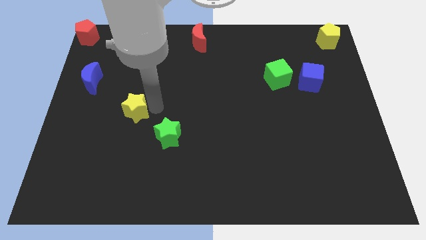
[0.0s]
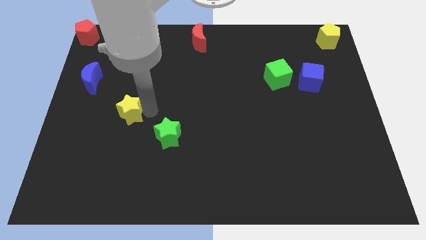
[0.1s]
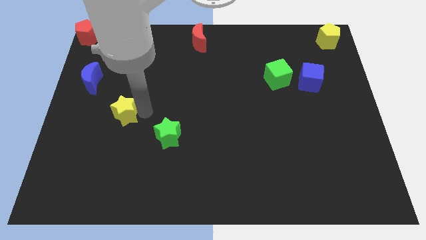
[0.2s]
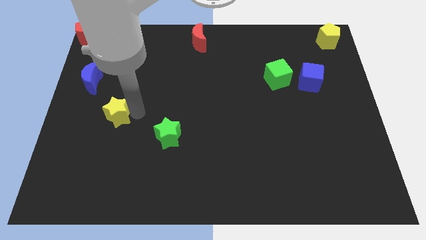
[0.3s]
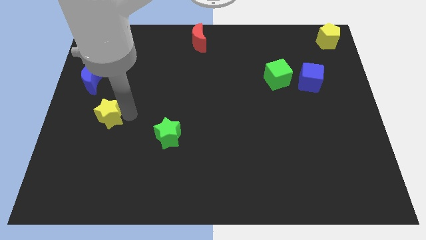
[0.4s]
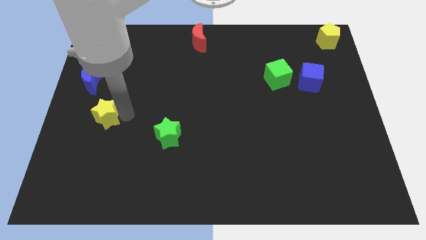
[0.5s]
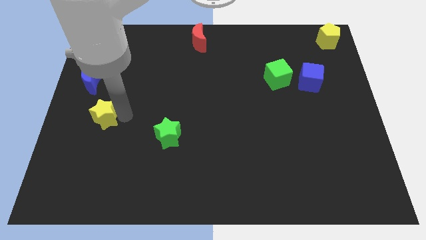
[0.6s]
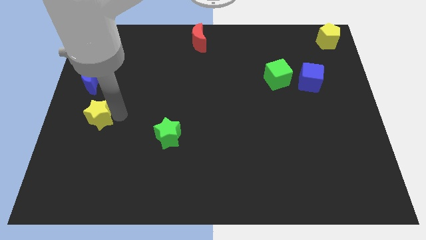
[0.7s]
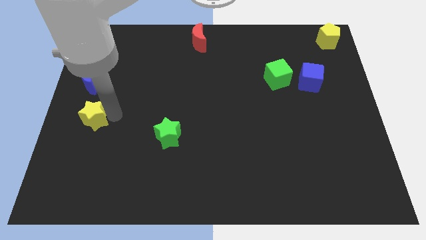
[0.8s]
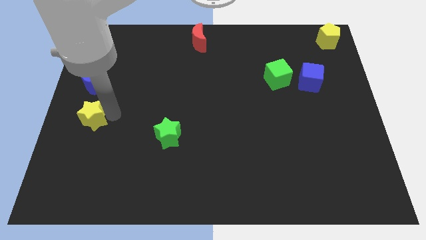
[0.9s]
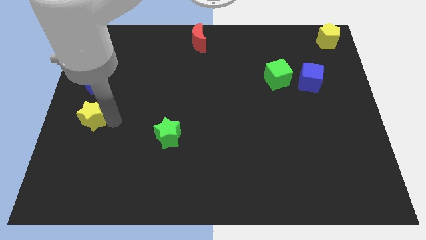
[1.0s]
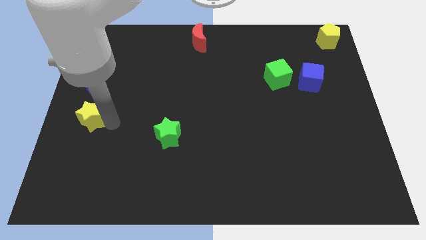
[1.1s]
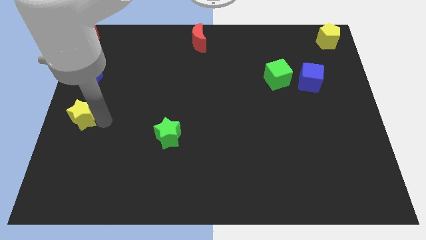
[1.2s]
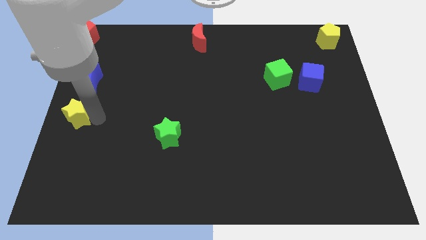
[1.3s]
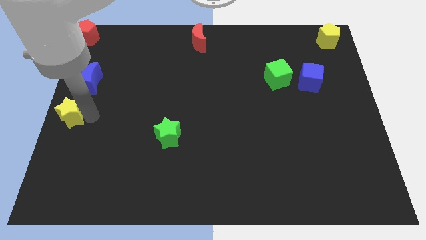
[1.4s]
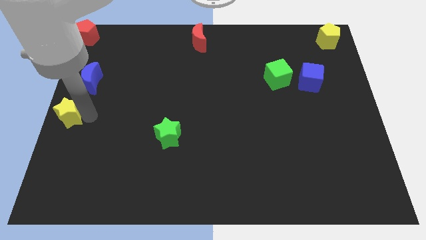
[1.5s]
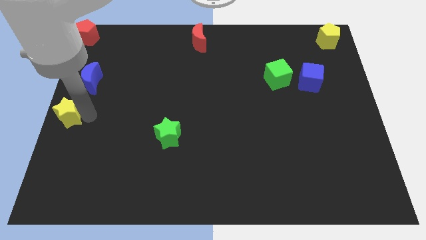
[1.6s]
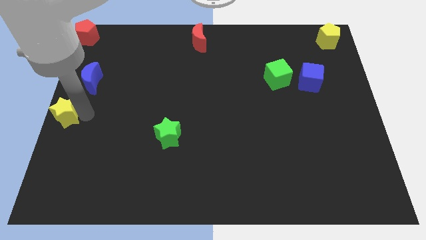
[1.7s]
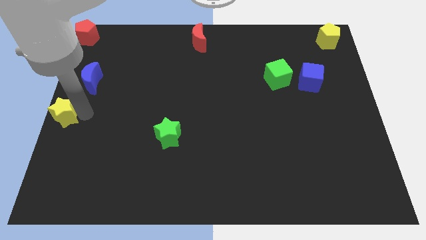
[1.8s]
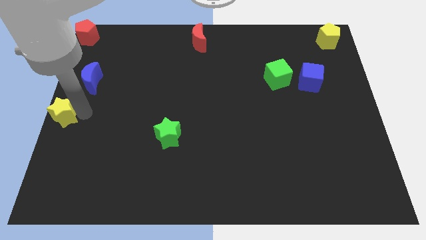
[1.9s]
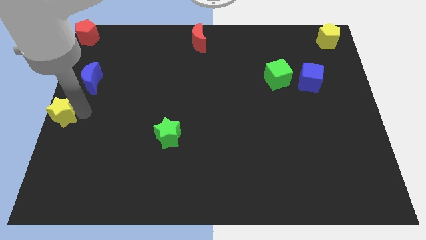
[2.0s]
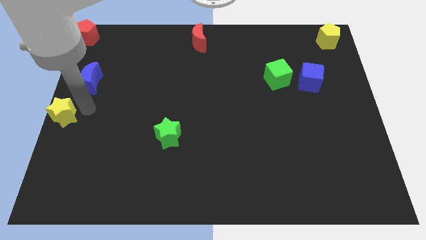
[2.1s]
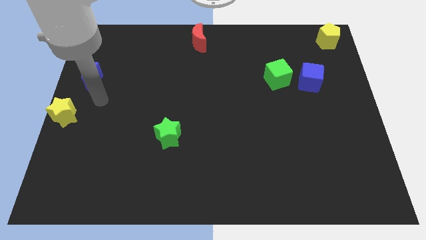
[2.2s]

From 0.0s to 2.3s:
push the yellow star to the center left of the board

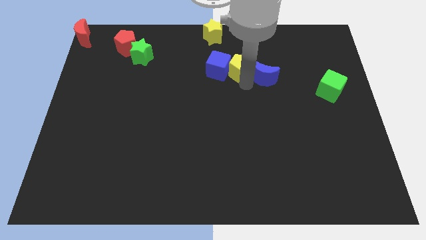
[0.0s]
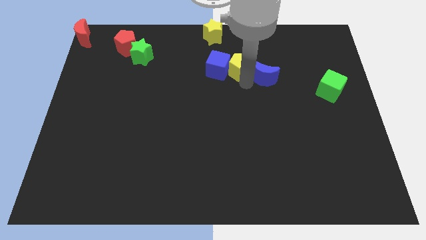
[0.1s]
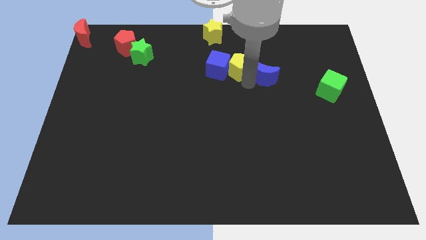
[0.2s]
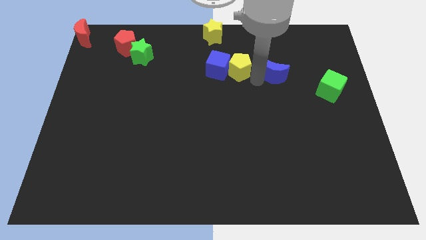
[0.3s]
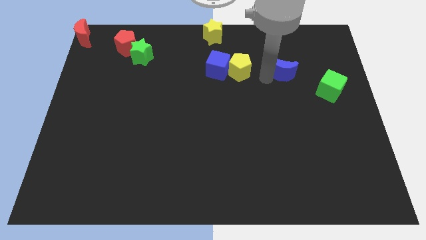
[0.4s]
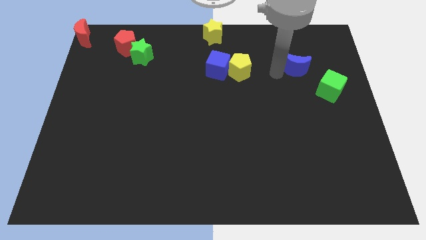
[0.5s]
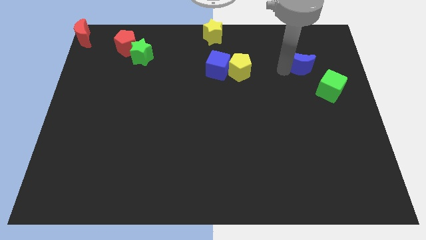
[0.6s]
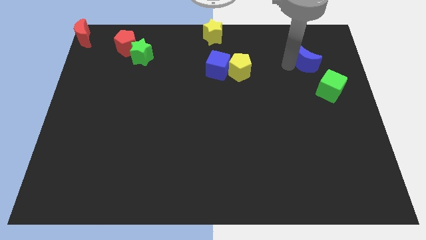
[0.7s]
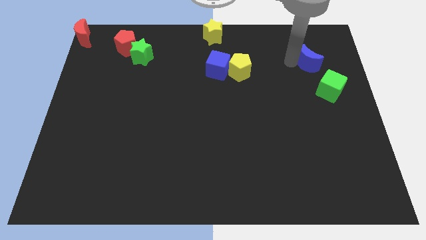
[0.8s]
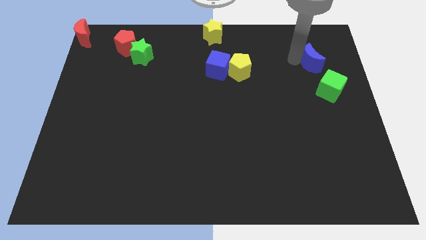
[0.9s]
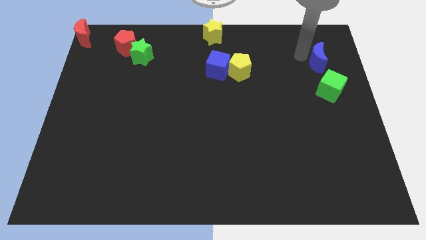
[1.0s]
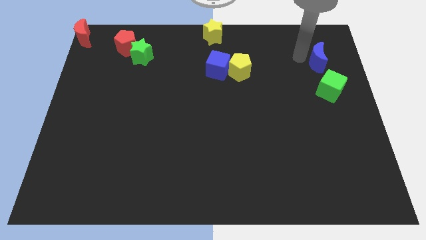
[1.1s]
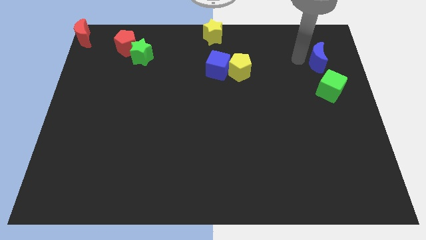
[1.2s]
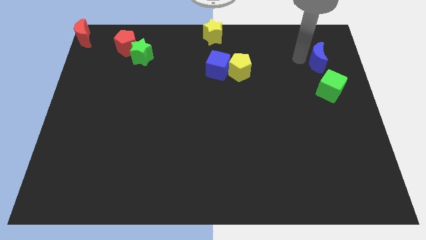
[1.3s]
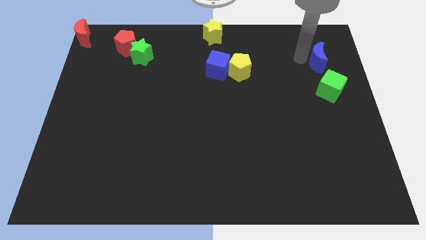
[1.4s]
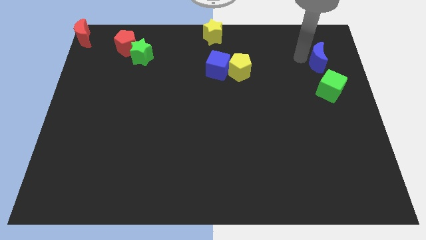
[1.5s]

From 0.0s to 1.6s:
push the blue moon away from the yellow pentagon

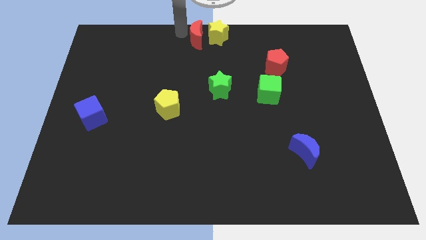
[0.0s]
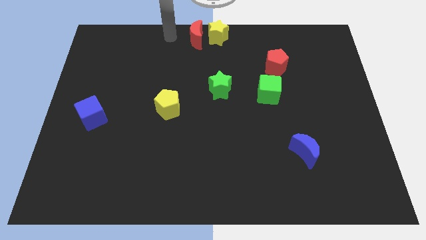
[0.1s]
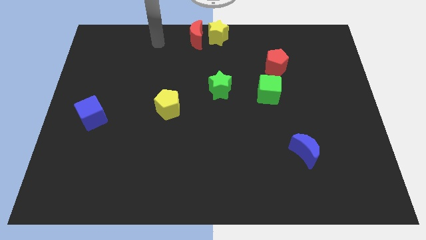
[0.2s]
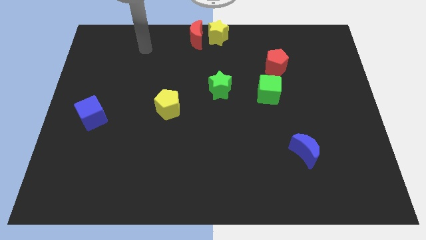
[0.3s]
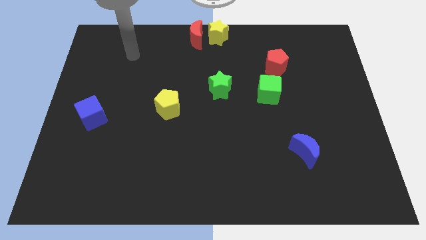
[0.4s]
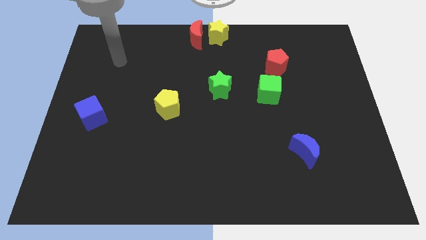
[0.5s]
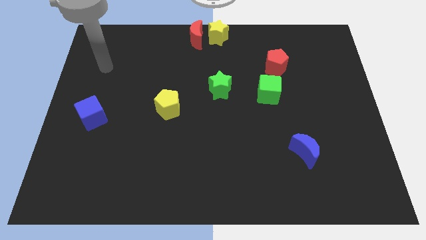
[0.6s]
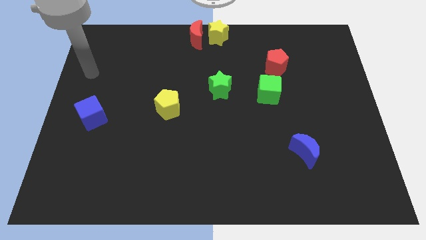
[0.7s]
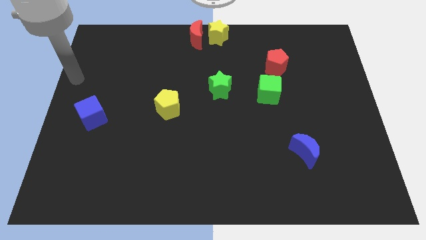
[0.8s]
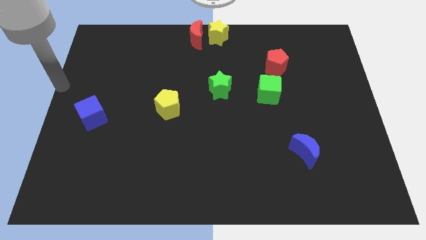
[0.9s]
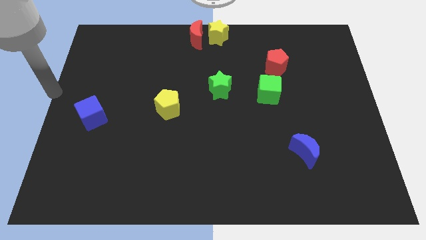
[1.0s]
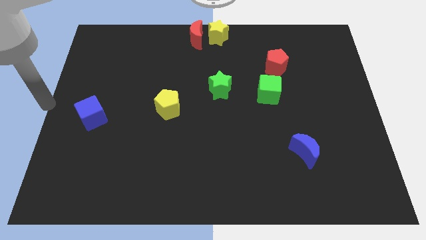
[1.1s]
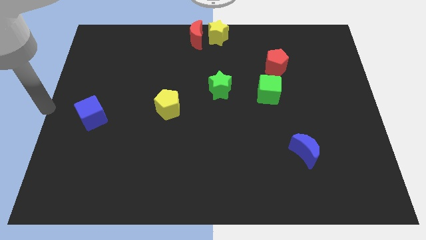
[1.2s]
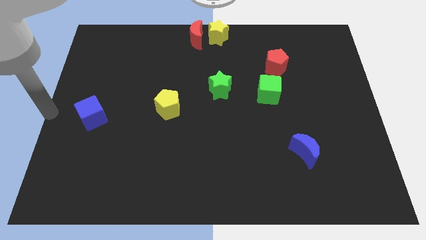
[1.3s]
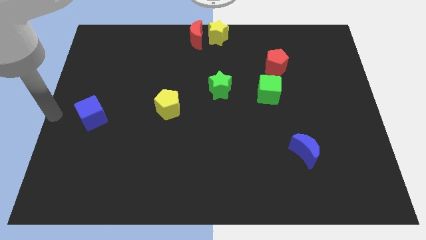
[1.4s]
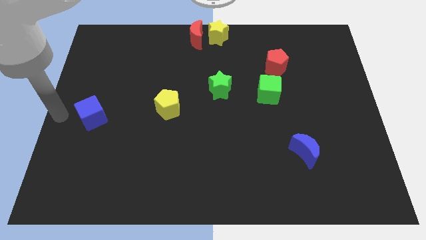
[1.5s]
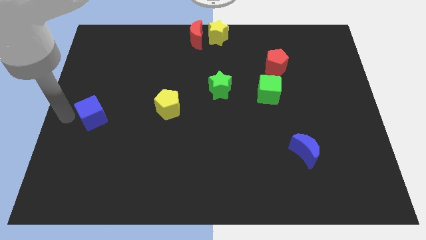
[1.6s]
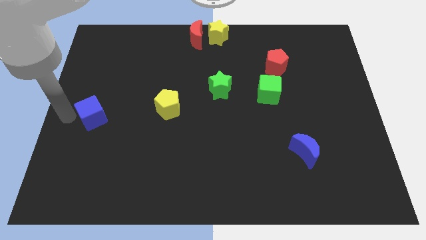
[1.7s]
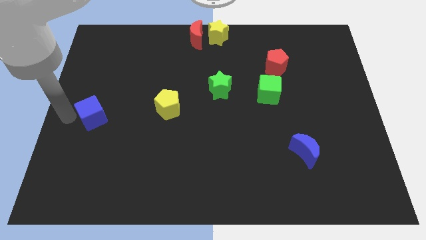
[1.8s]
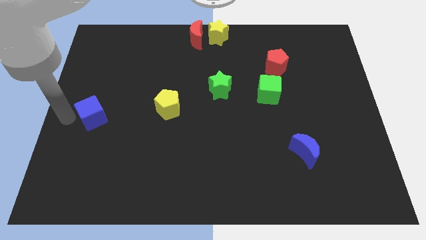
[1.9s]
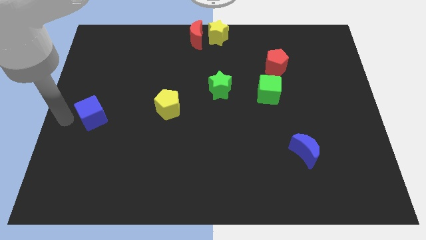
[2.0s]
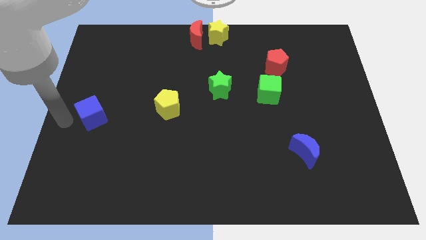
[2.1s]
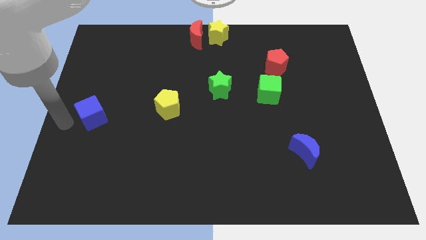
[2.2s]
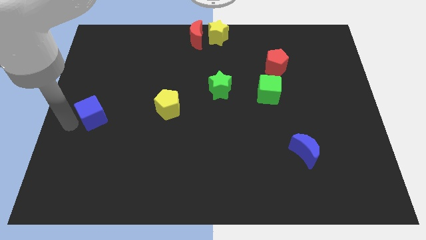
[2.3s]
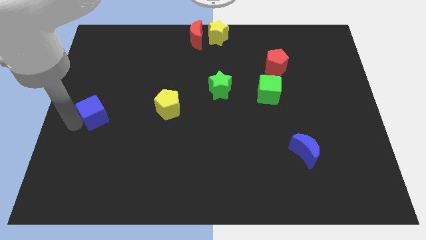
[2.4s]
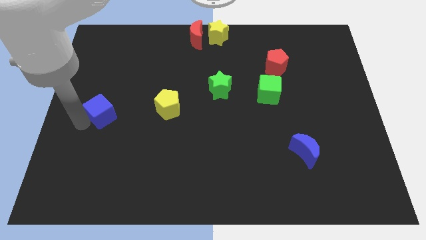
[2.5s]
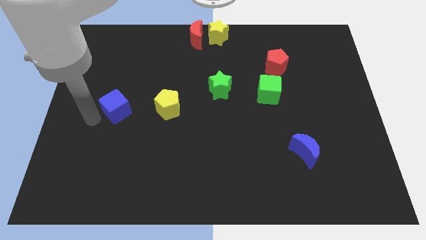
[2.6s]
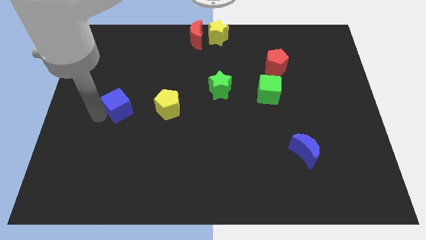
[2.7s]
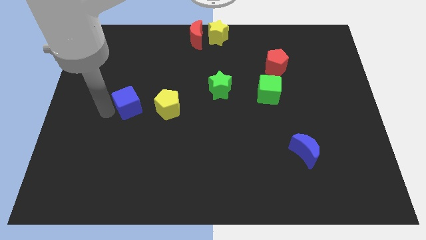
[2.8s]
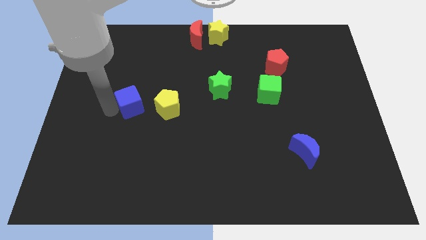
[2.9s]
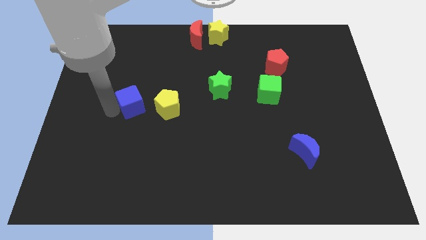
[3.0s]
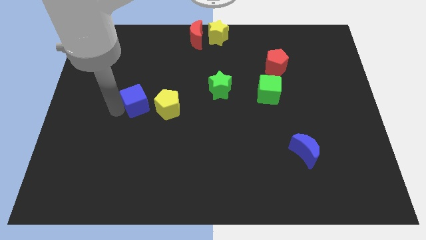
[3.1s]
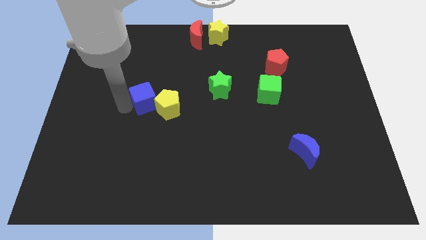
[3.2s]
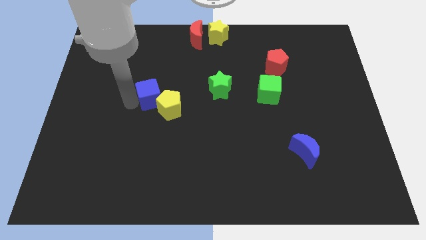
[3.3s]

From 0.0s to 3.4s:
push blue cube into yellow pentgaon

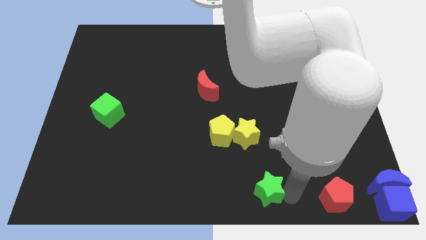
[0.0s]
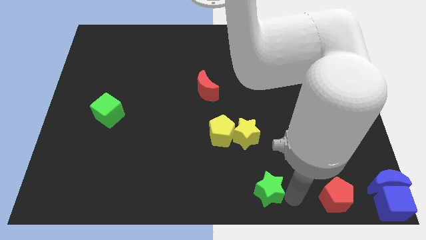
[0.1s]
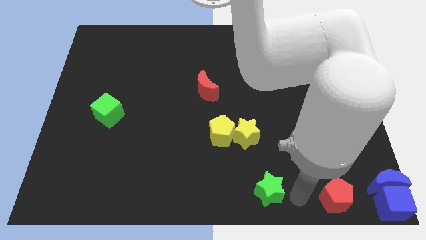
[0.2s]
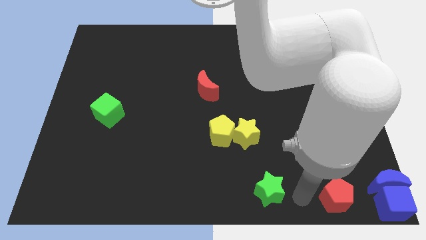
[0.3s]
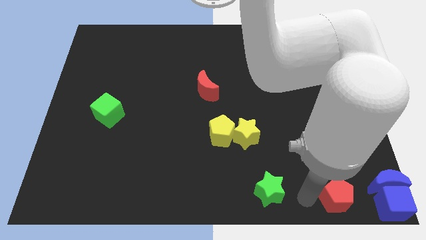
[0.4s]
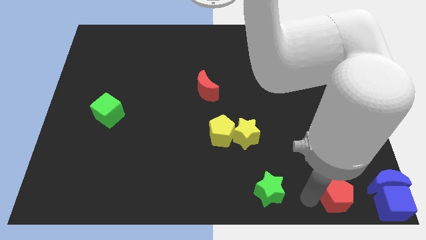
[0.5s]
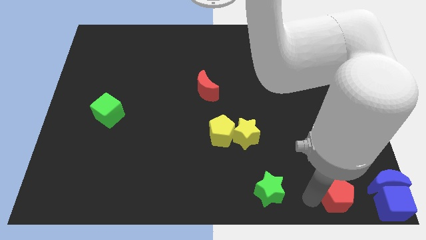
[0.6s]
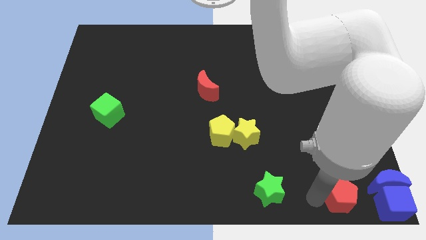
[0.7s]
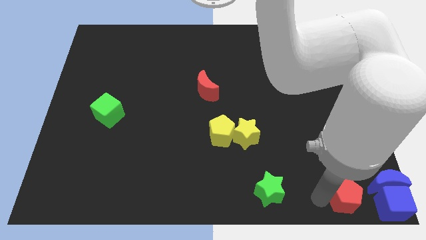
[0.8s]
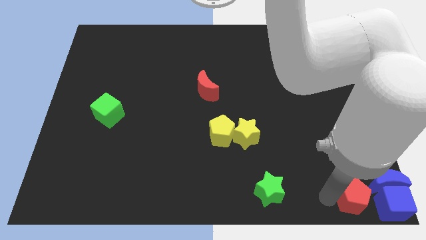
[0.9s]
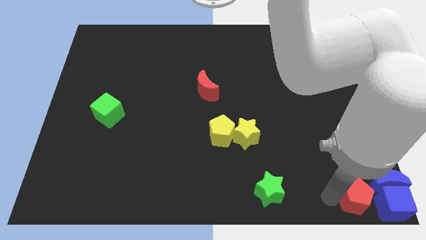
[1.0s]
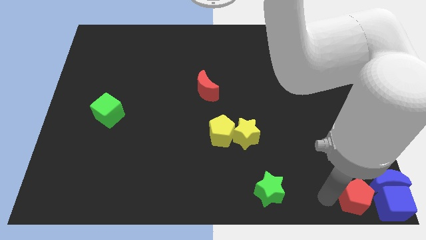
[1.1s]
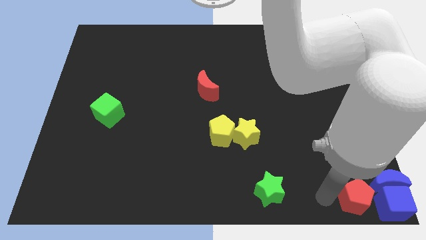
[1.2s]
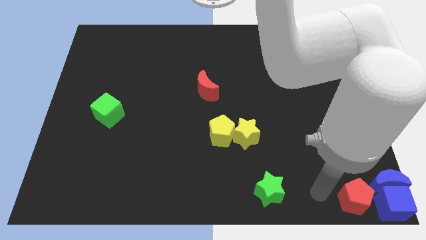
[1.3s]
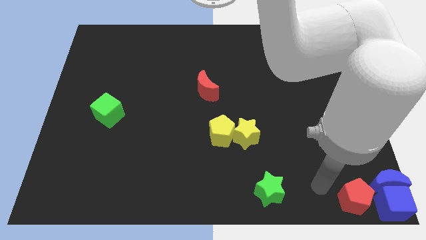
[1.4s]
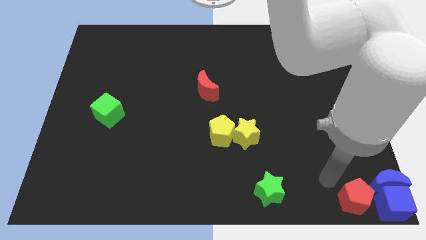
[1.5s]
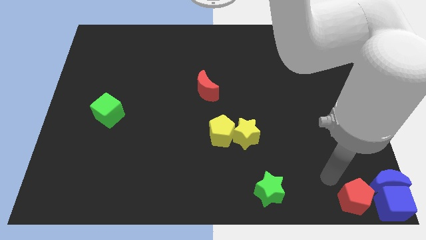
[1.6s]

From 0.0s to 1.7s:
push the red pentagon to the left of the blue cube
